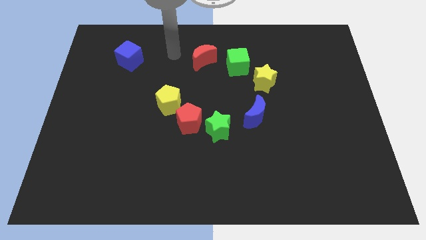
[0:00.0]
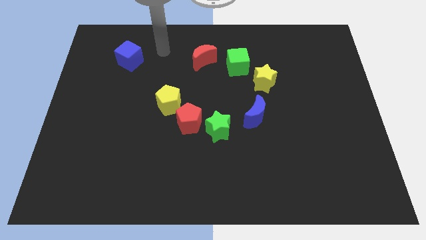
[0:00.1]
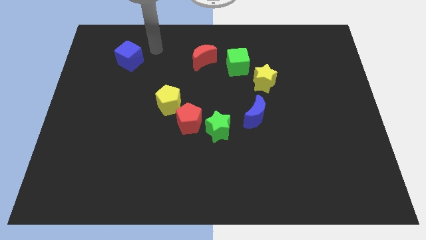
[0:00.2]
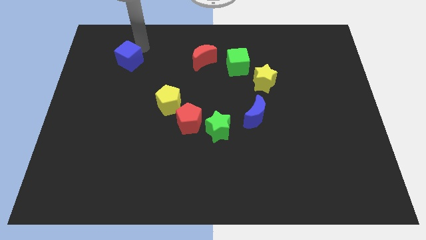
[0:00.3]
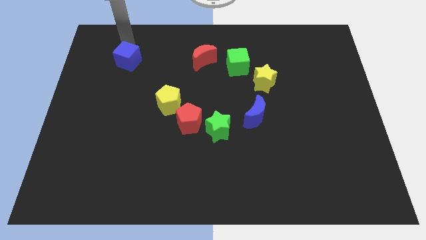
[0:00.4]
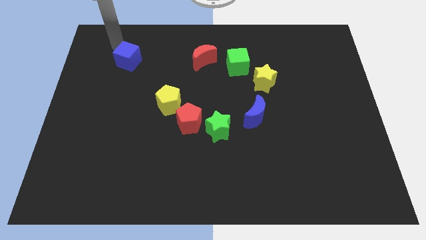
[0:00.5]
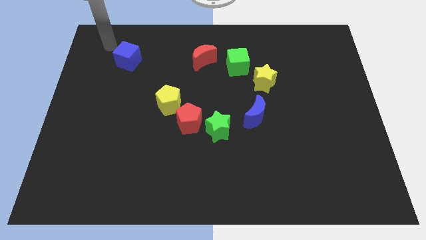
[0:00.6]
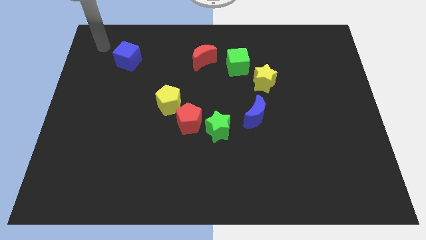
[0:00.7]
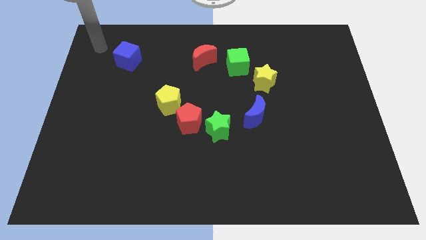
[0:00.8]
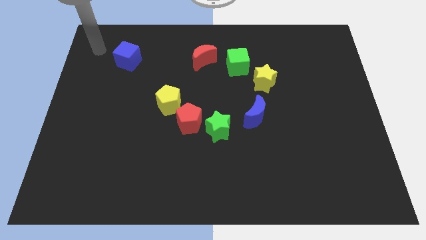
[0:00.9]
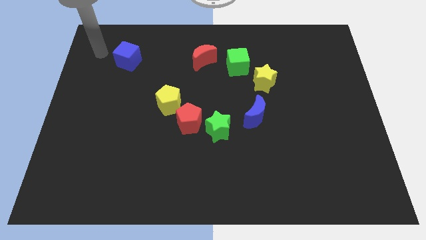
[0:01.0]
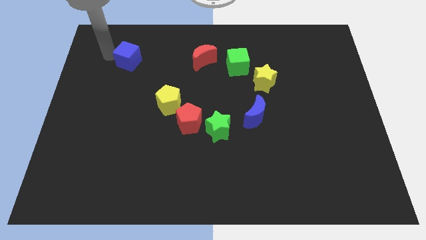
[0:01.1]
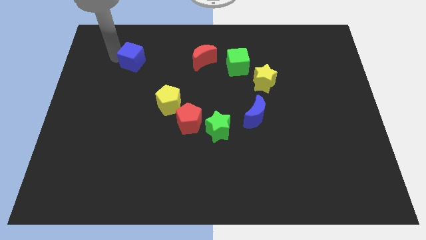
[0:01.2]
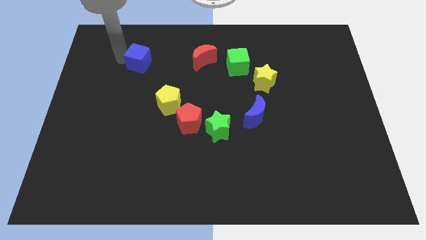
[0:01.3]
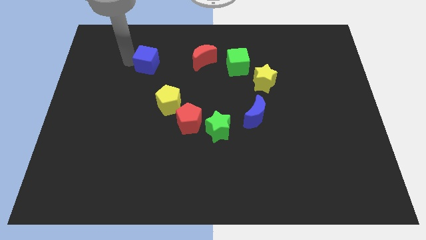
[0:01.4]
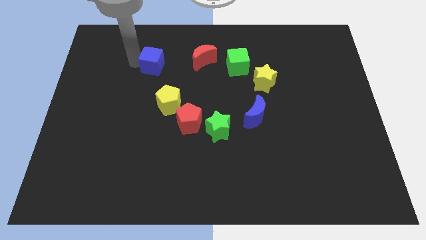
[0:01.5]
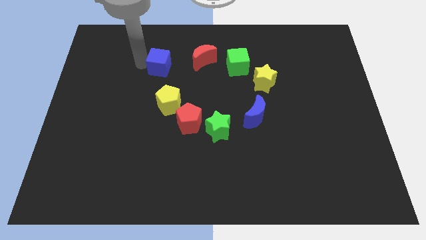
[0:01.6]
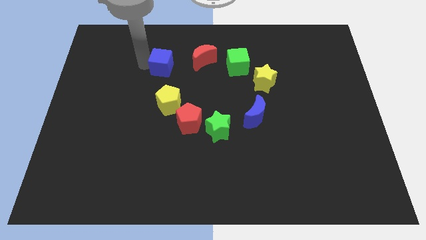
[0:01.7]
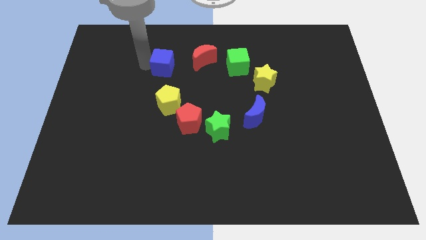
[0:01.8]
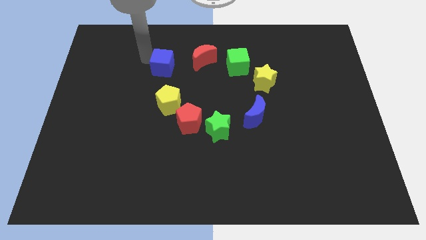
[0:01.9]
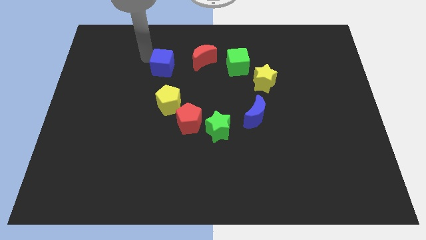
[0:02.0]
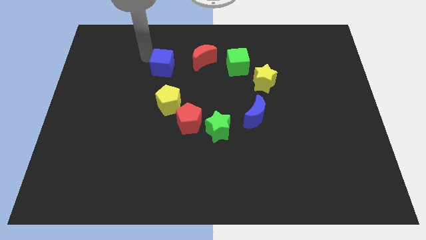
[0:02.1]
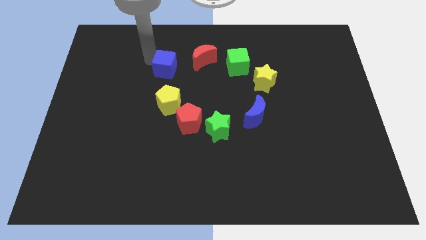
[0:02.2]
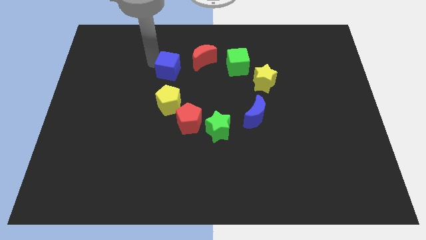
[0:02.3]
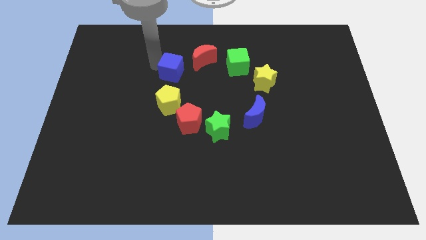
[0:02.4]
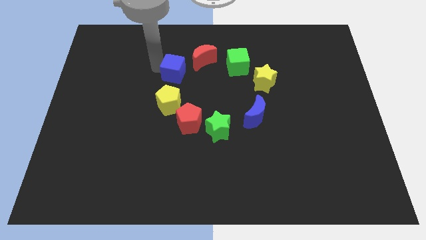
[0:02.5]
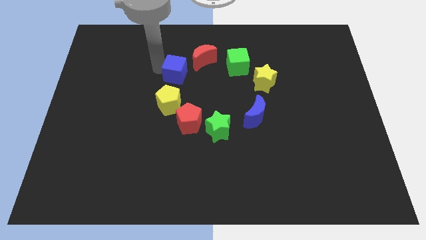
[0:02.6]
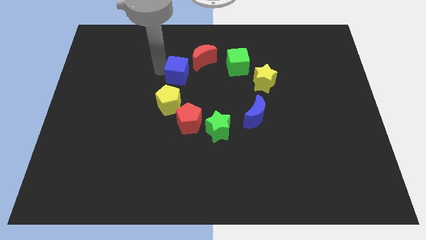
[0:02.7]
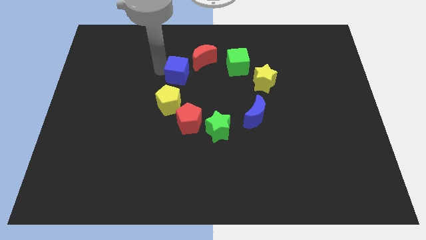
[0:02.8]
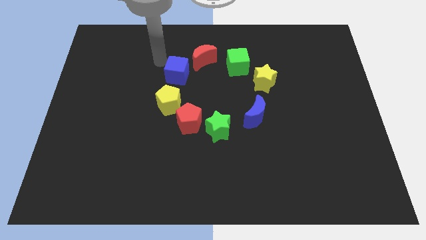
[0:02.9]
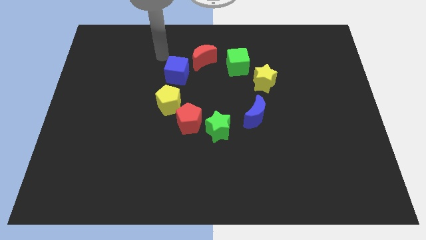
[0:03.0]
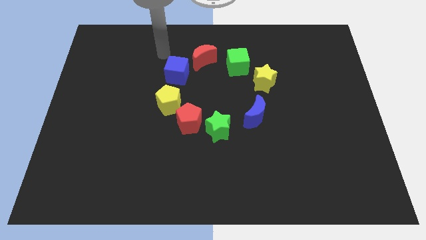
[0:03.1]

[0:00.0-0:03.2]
place the blue cube on the top of the yellow pentagon to make the circle

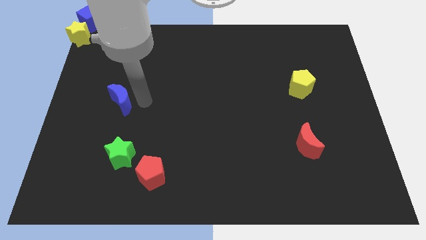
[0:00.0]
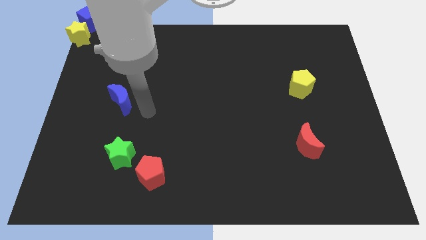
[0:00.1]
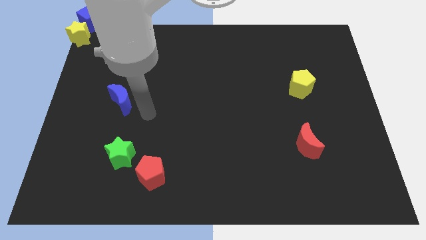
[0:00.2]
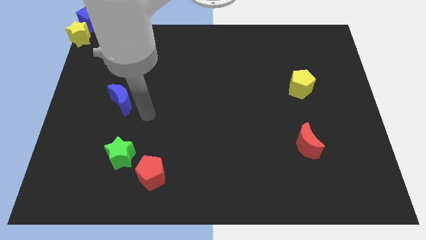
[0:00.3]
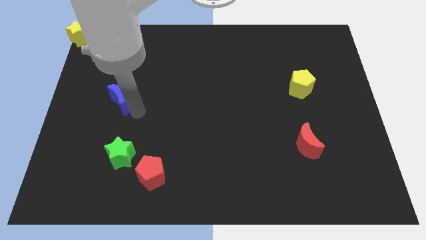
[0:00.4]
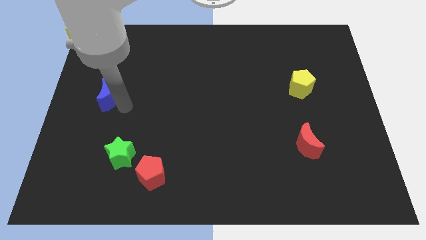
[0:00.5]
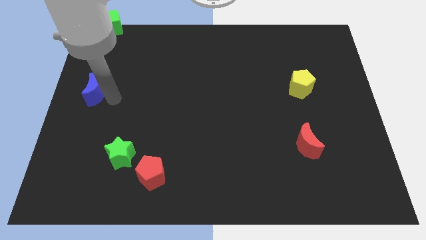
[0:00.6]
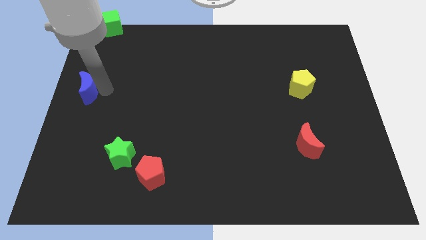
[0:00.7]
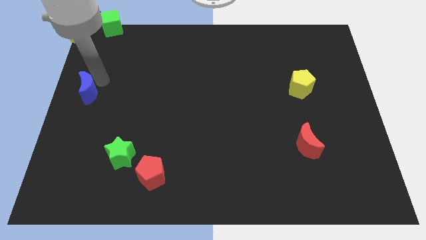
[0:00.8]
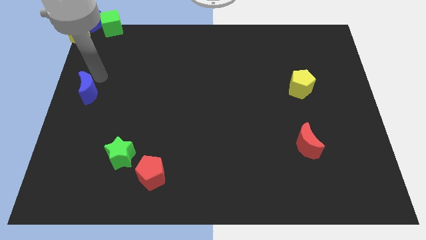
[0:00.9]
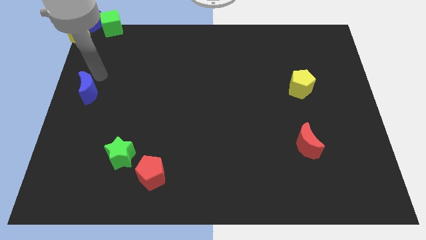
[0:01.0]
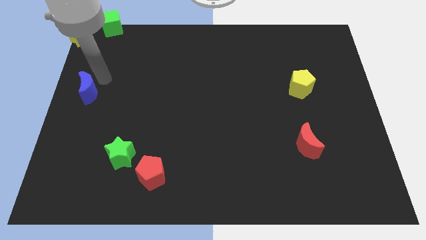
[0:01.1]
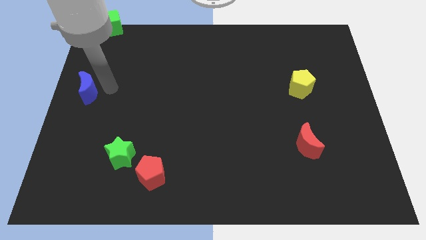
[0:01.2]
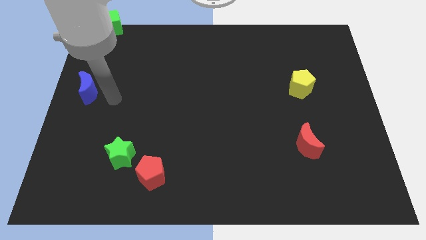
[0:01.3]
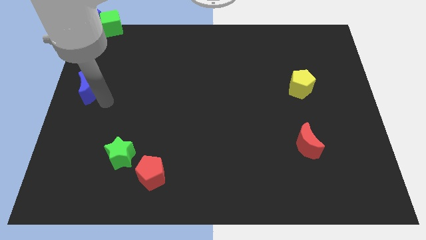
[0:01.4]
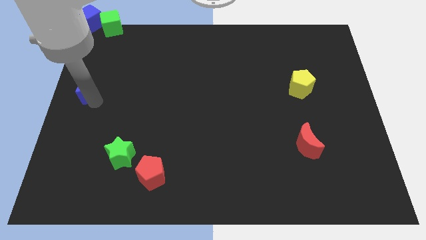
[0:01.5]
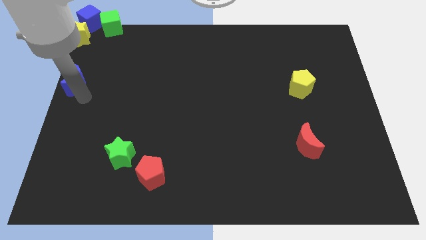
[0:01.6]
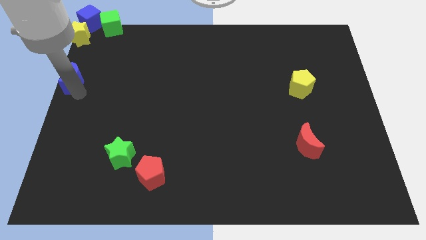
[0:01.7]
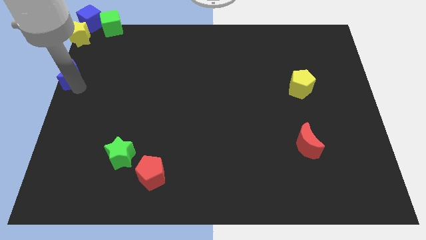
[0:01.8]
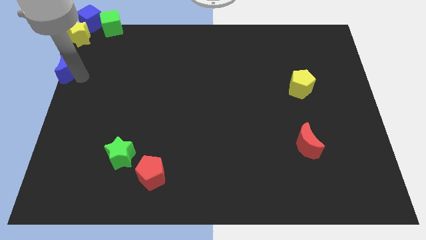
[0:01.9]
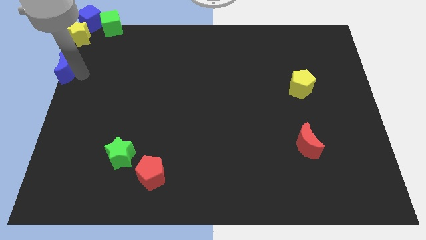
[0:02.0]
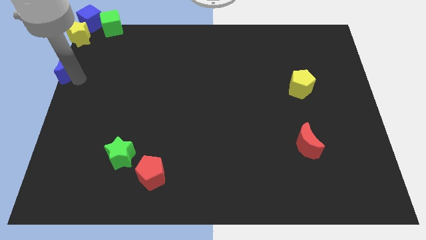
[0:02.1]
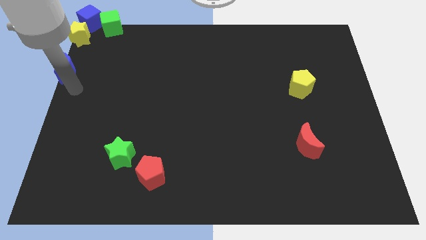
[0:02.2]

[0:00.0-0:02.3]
move the blue moon below the yellow star

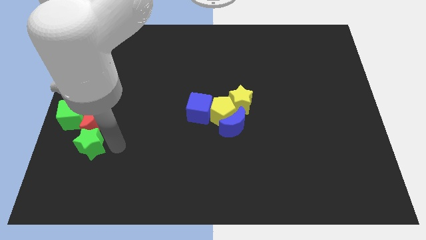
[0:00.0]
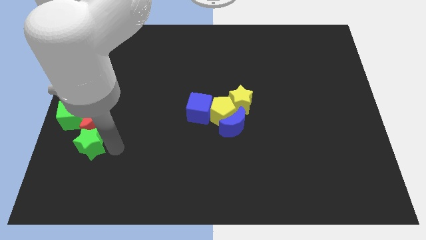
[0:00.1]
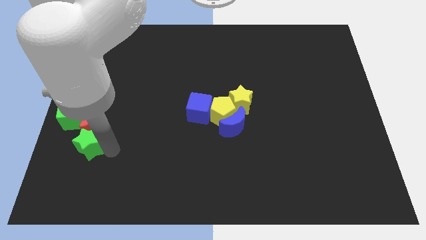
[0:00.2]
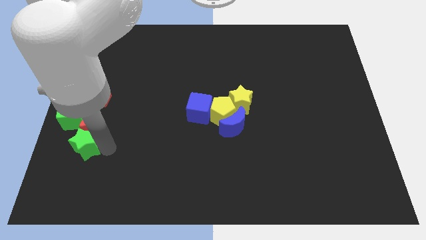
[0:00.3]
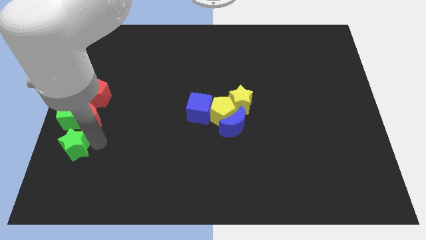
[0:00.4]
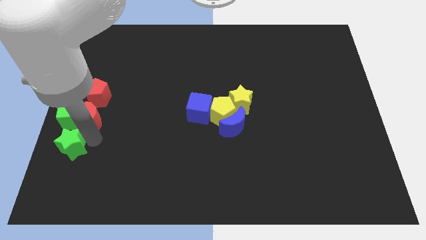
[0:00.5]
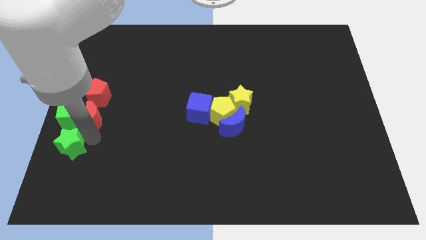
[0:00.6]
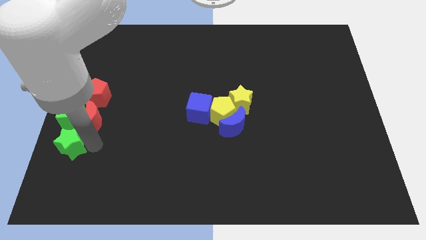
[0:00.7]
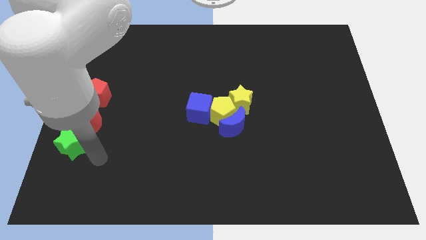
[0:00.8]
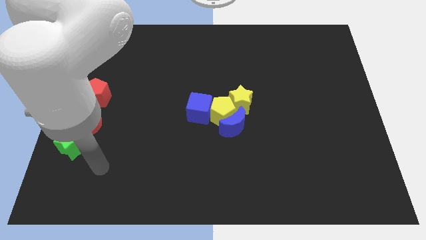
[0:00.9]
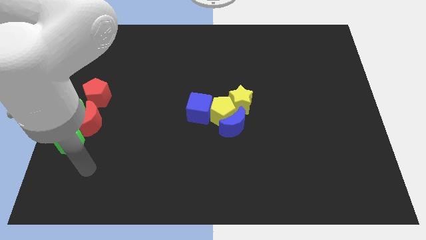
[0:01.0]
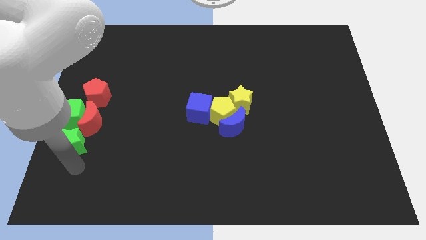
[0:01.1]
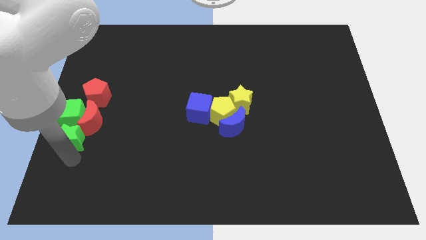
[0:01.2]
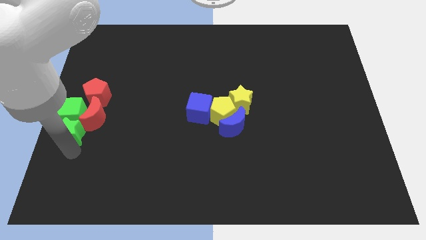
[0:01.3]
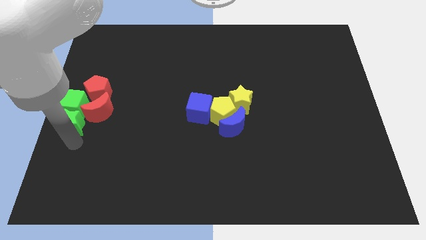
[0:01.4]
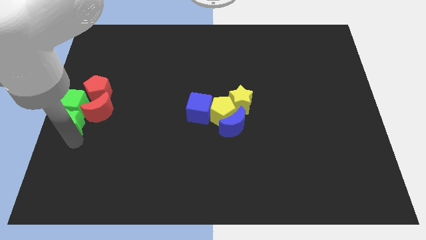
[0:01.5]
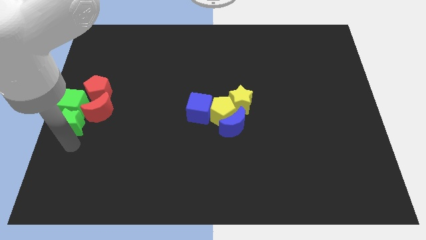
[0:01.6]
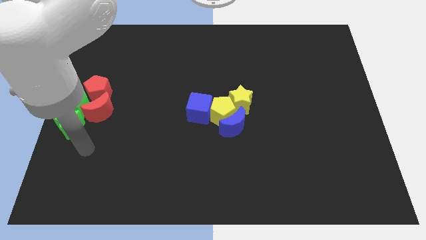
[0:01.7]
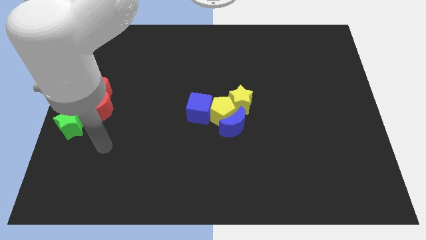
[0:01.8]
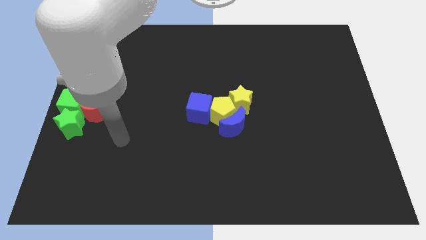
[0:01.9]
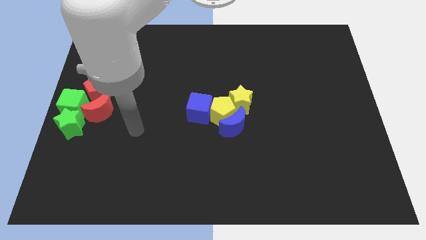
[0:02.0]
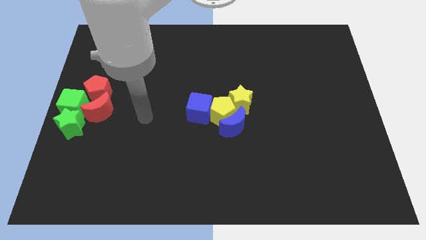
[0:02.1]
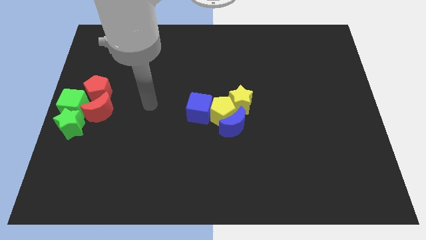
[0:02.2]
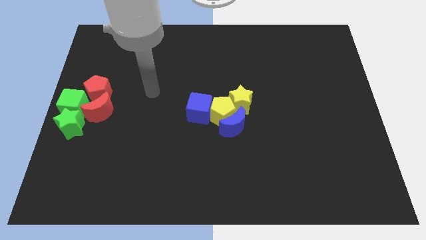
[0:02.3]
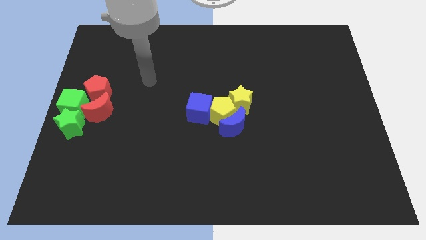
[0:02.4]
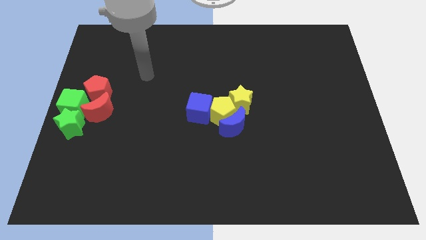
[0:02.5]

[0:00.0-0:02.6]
push red and green blocks towards the center left corner of the board

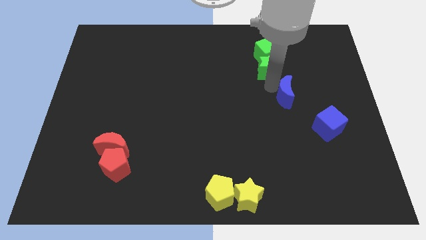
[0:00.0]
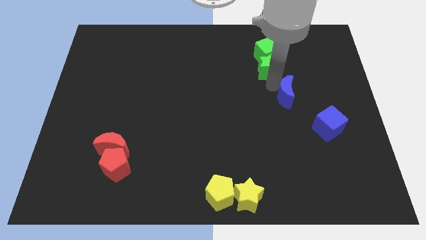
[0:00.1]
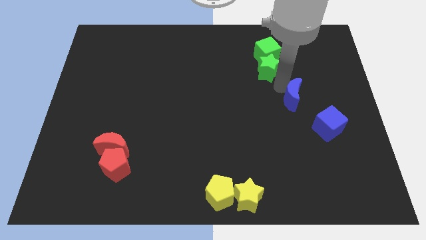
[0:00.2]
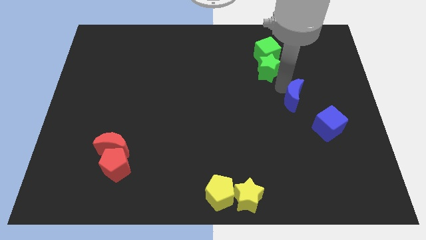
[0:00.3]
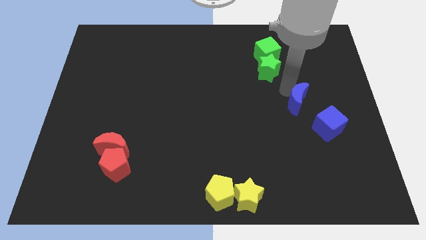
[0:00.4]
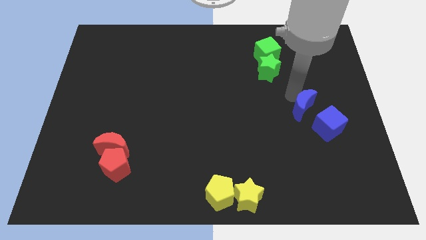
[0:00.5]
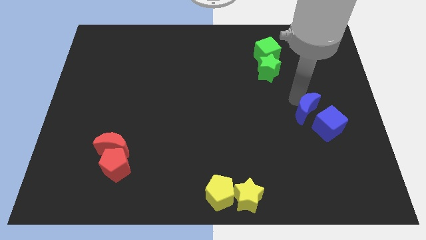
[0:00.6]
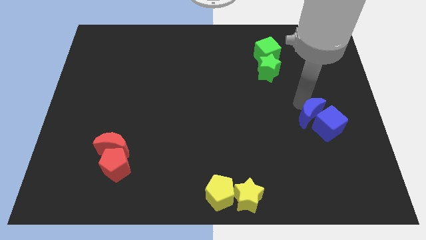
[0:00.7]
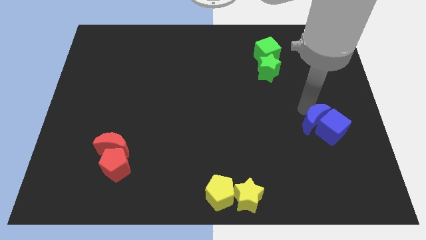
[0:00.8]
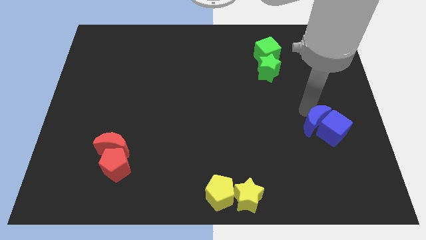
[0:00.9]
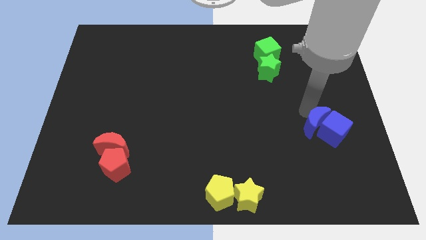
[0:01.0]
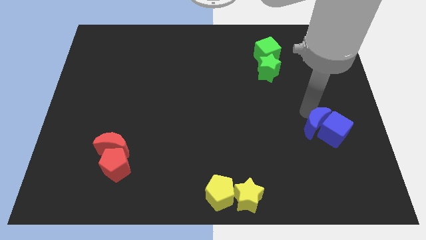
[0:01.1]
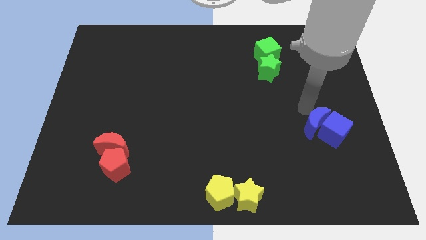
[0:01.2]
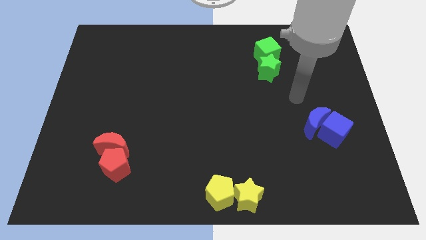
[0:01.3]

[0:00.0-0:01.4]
place blue moon above the blue cube
